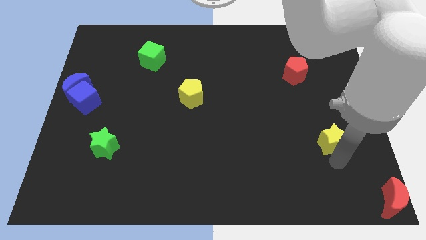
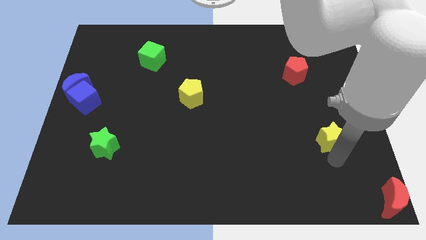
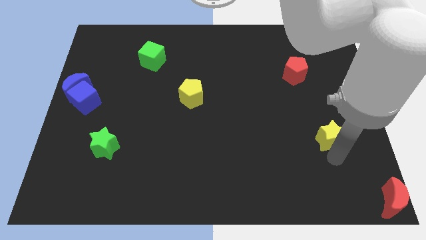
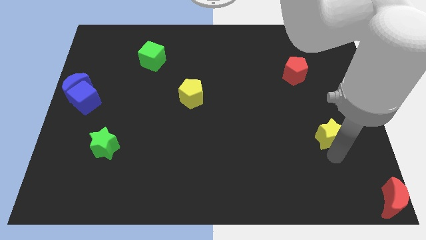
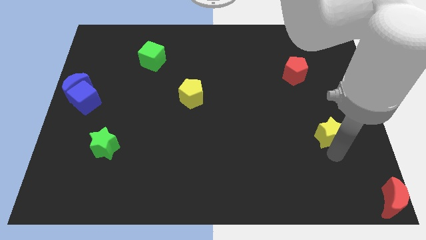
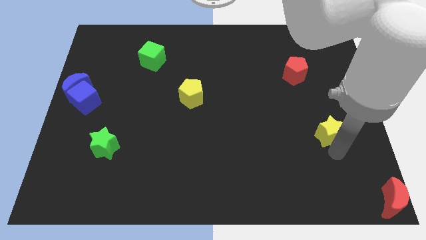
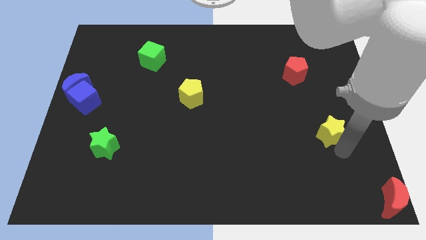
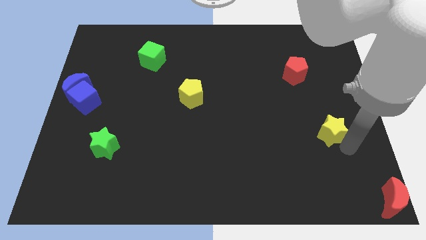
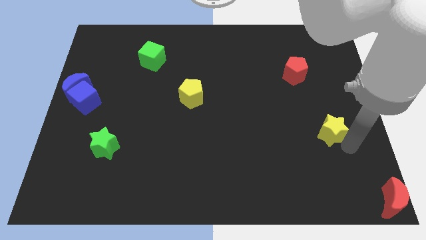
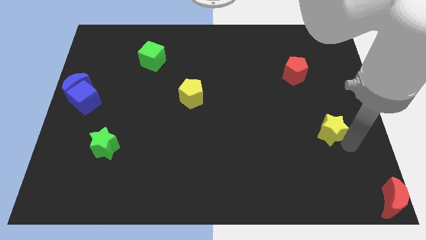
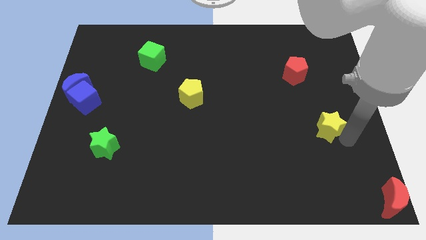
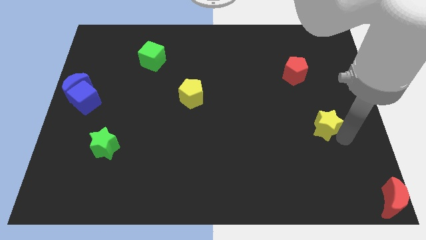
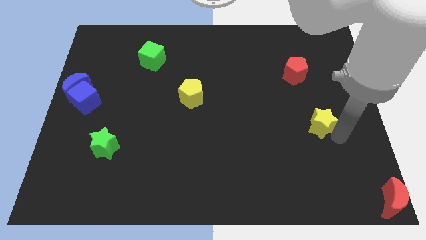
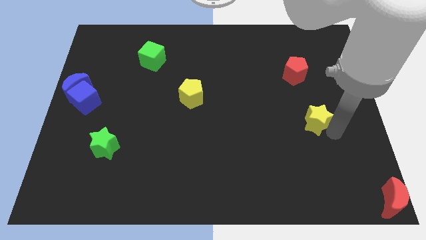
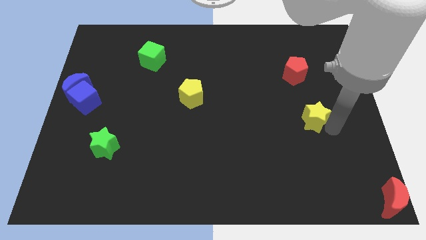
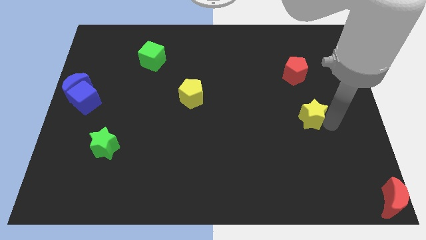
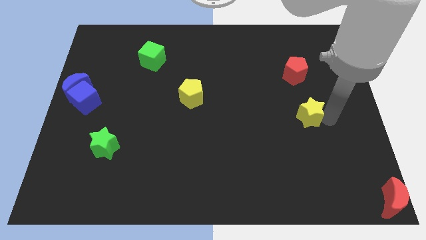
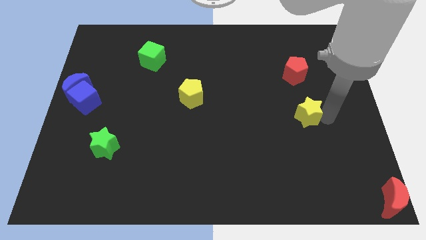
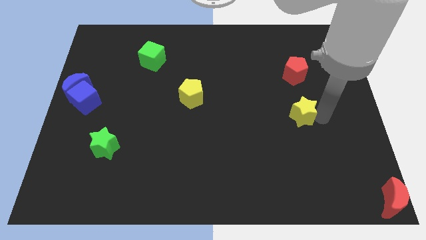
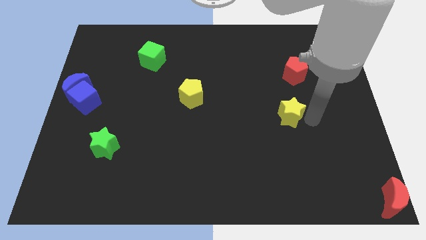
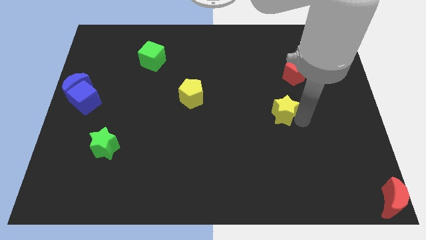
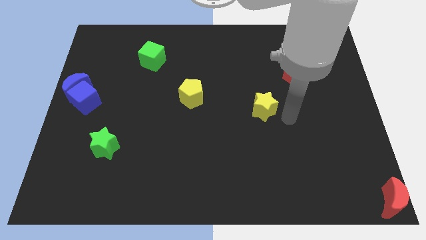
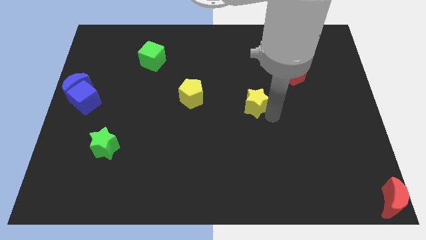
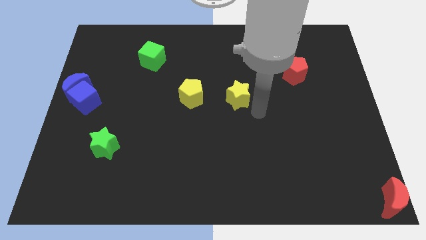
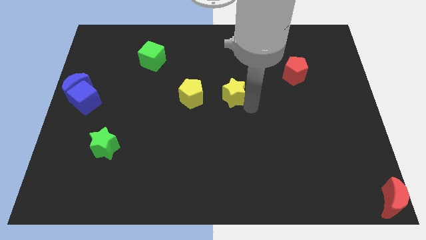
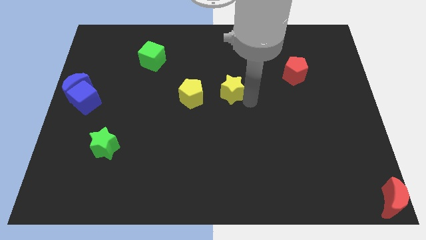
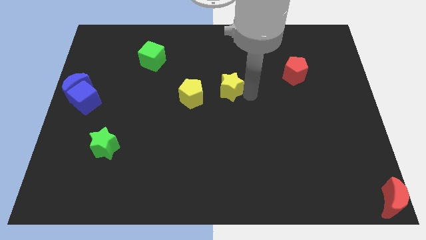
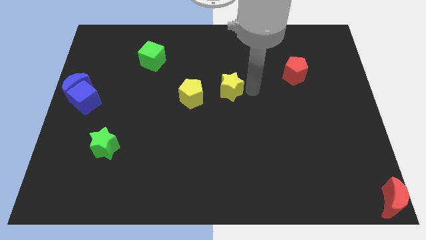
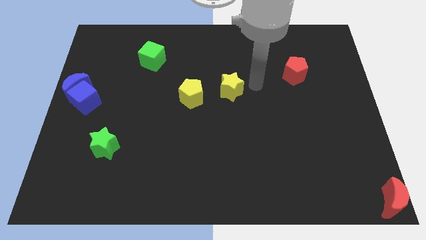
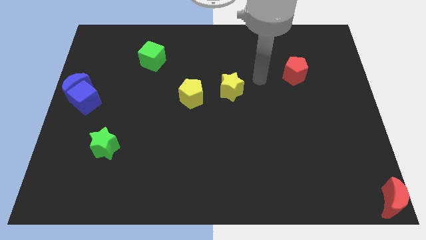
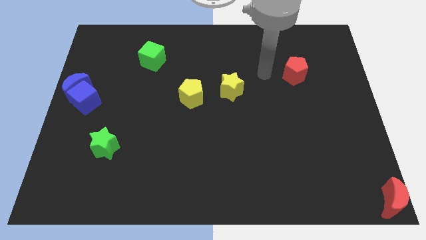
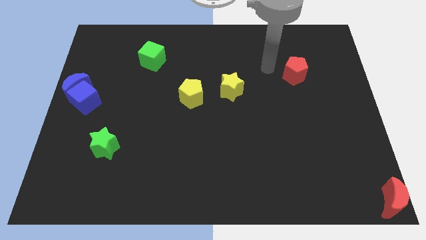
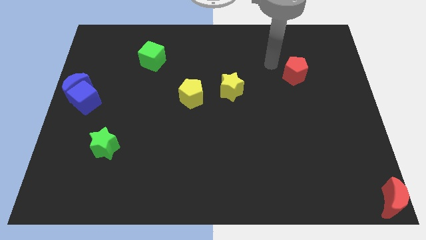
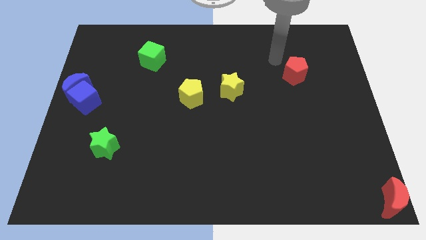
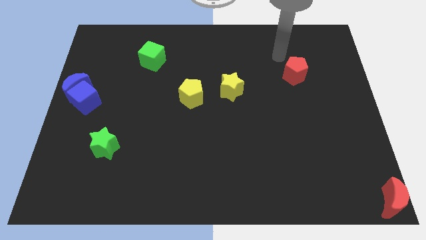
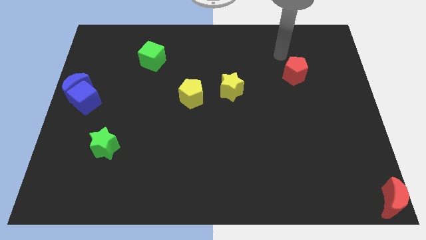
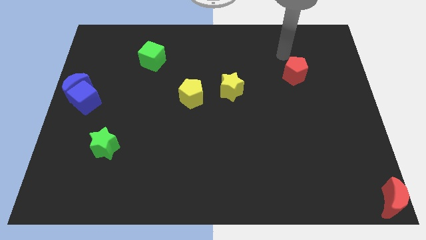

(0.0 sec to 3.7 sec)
move the yellow star in between the red and yellow pentagons

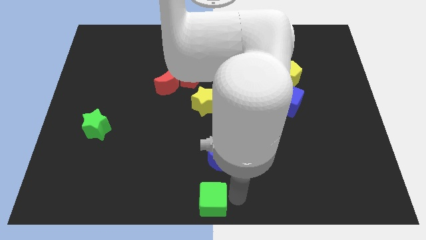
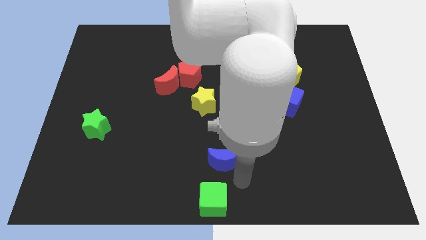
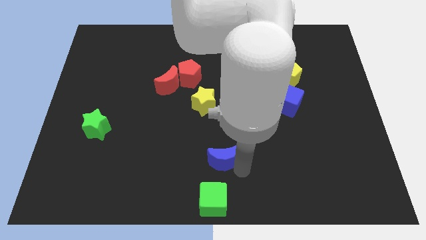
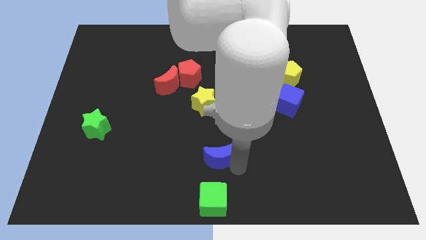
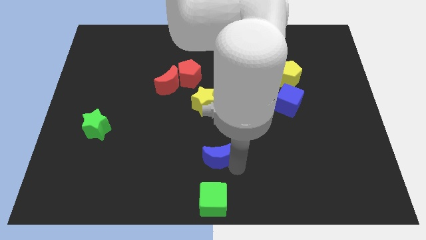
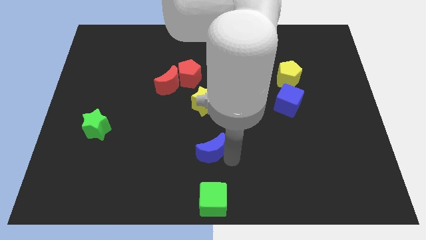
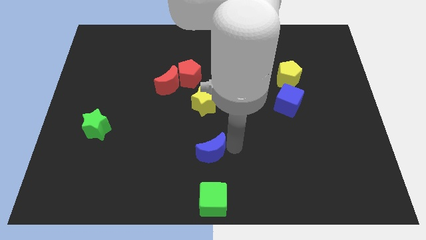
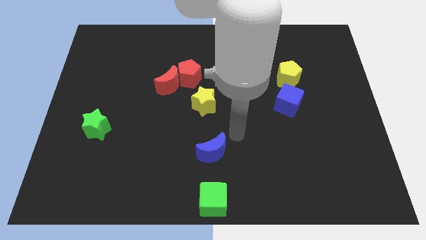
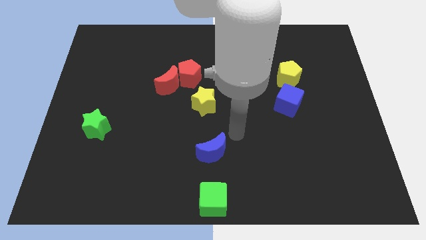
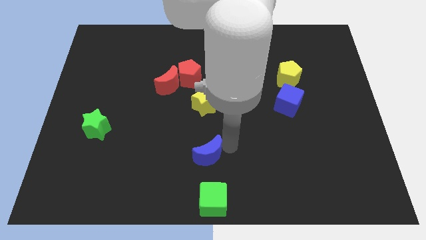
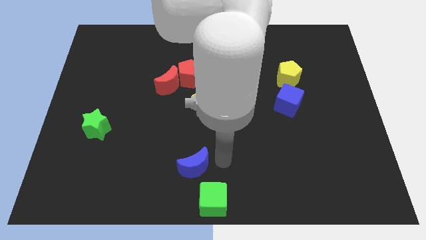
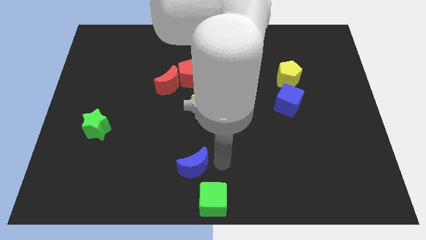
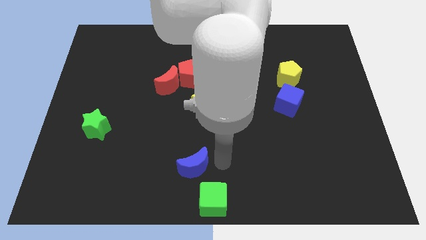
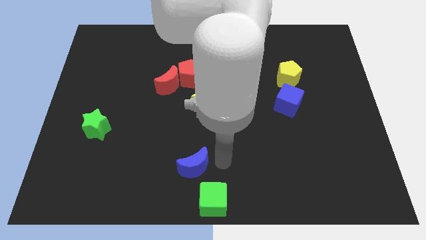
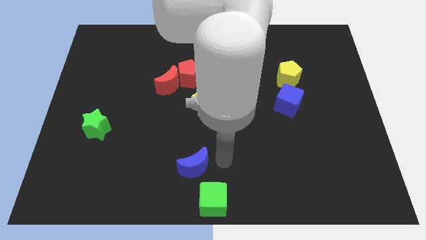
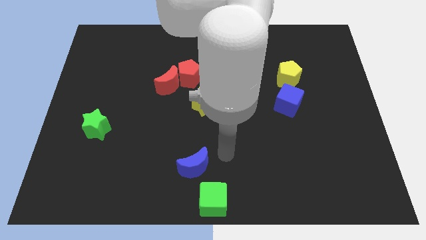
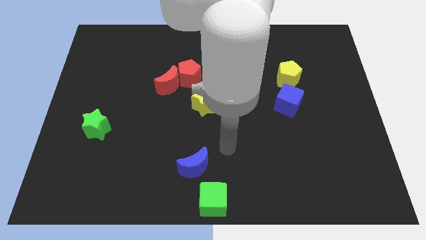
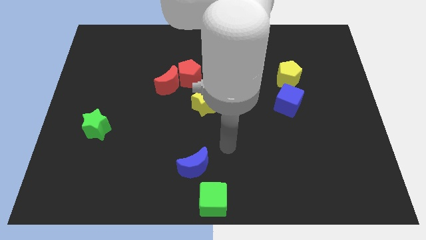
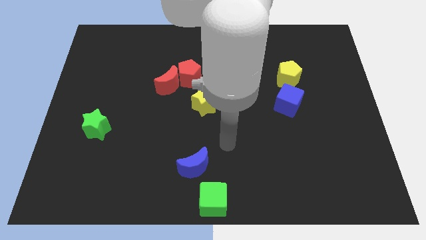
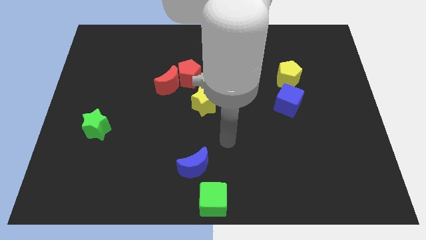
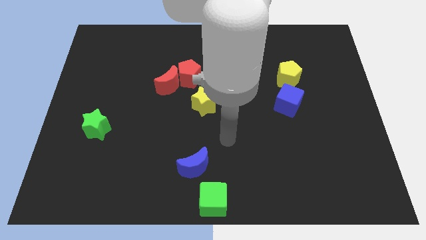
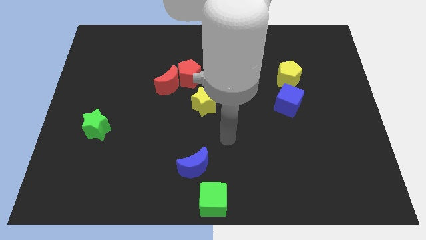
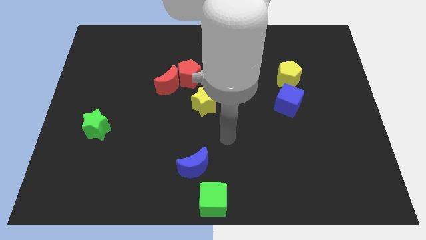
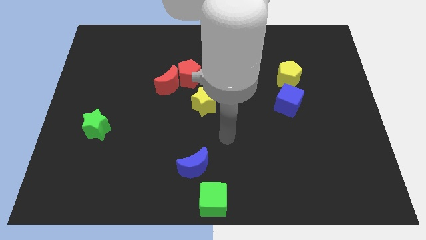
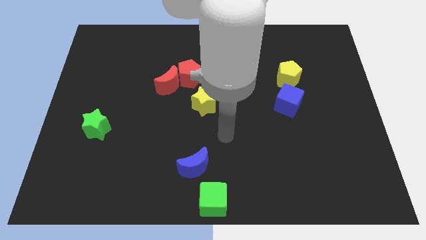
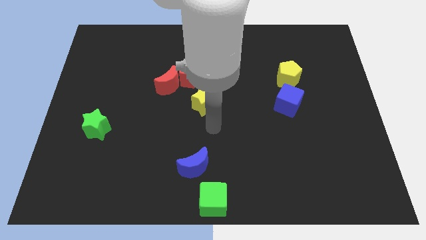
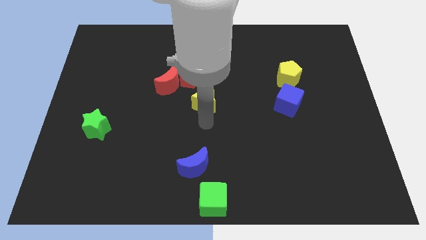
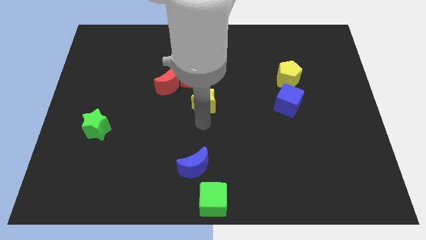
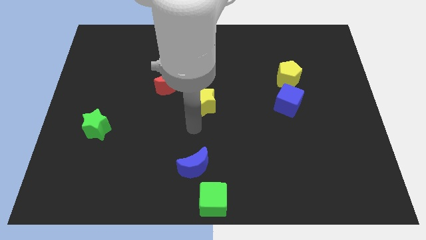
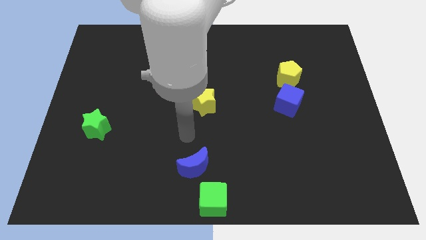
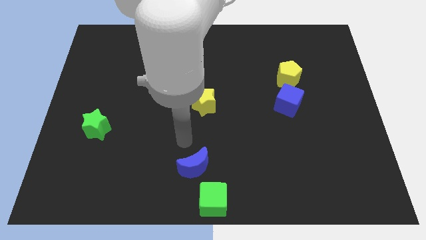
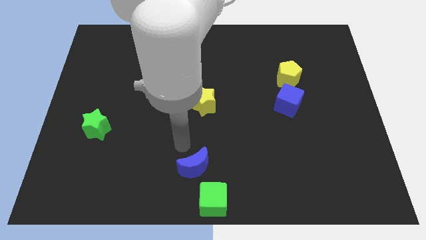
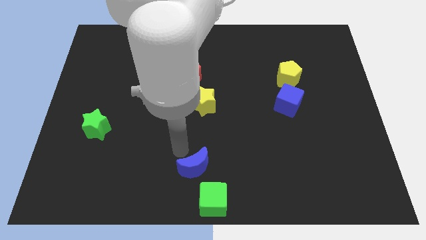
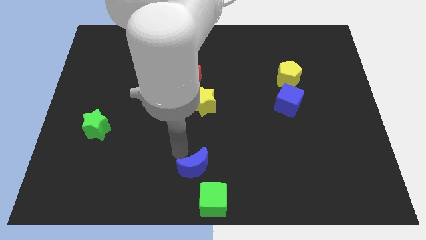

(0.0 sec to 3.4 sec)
slightly move the blue crescent to left side

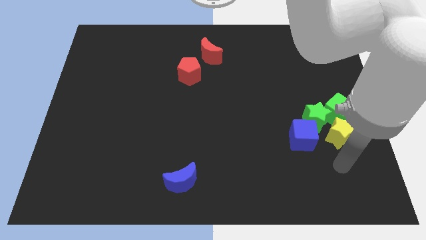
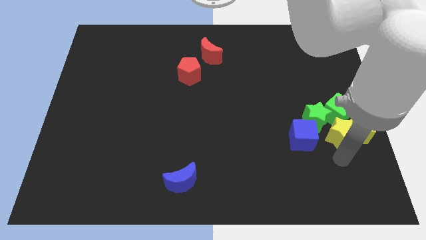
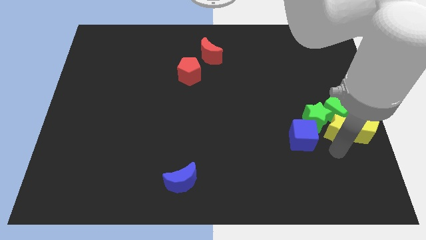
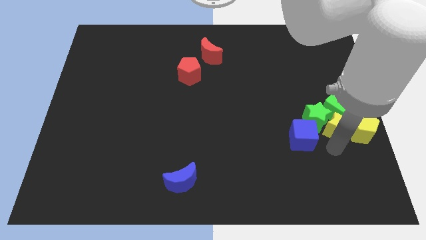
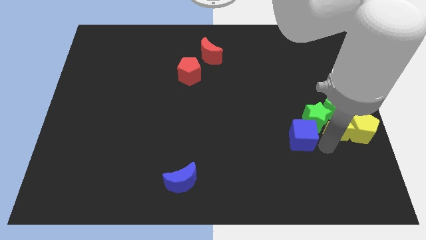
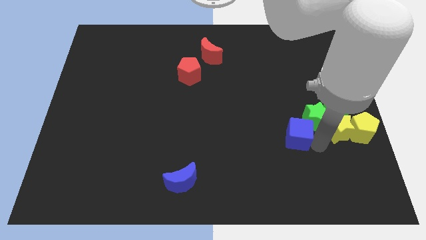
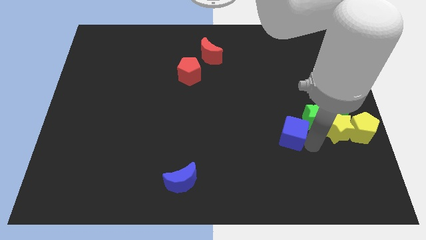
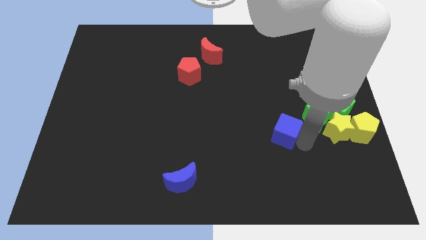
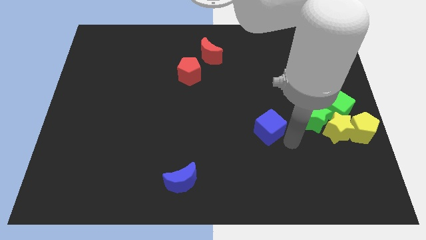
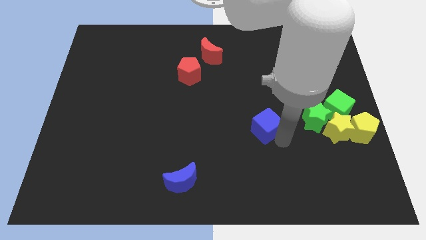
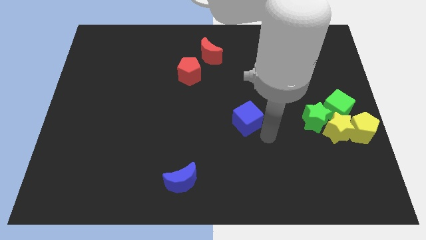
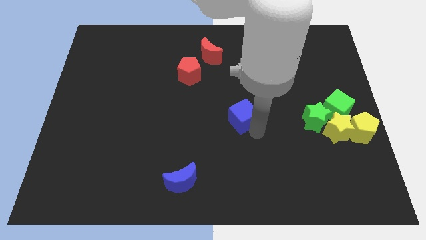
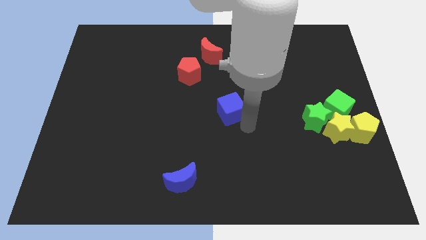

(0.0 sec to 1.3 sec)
place blue cube to the left of green star

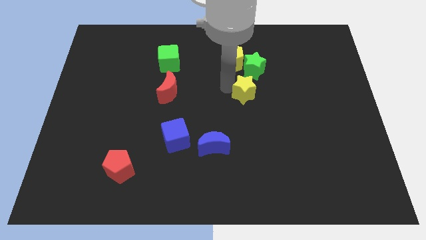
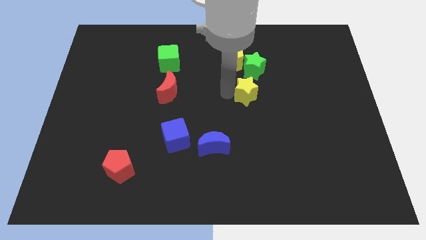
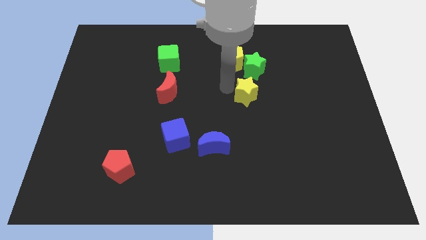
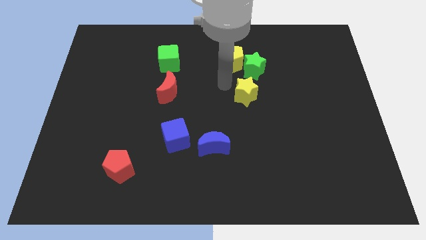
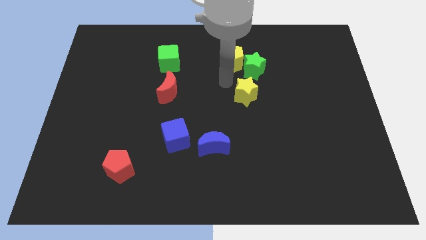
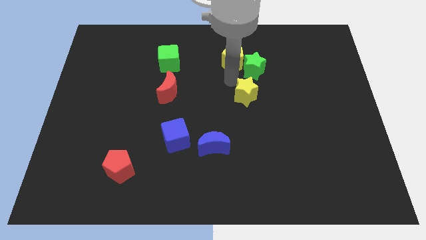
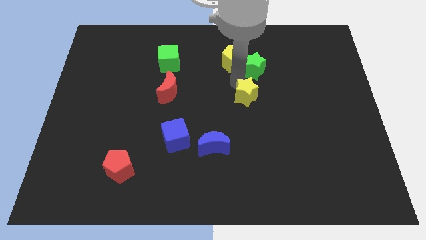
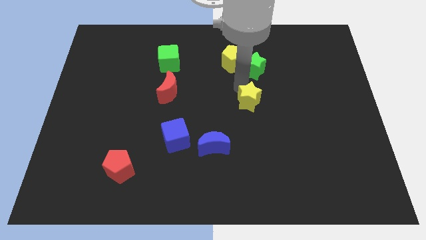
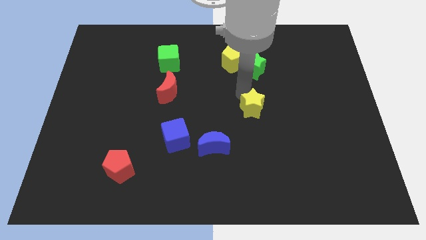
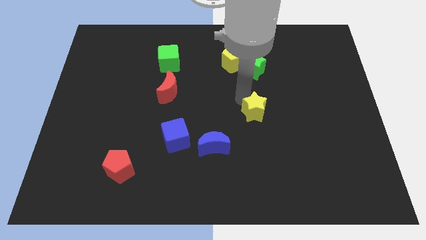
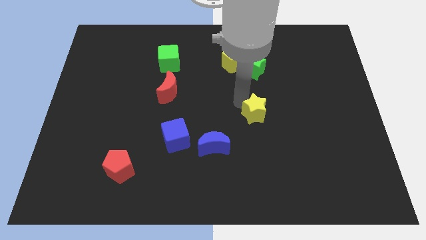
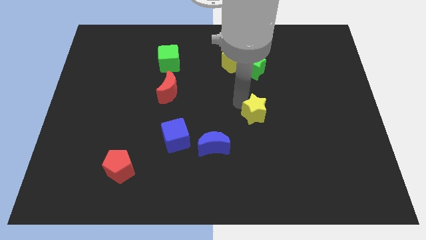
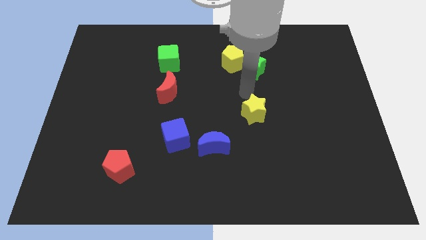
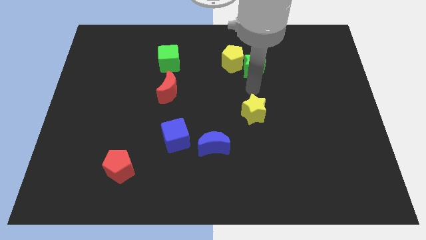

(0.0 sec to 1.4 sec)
place your arm in between green star and yellow star
